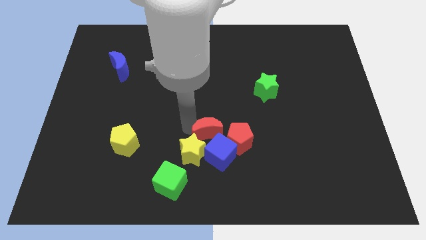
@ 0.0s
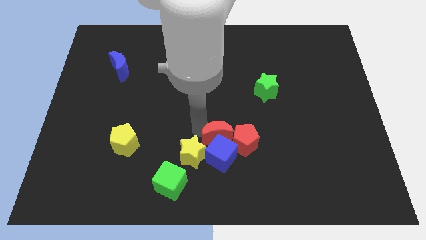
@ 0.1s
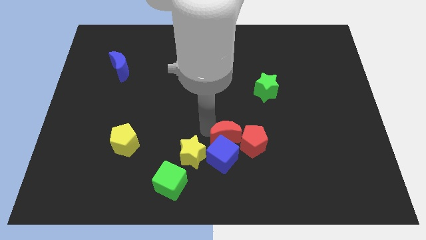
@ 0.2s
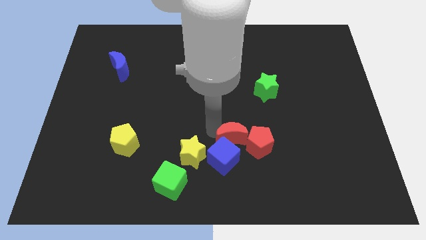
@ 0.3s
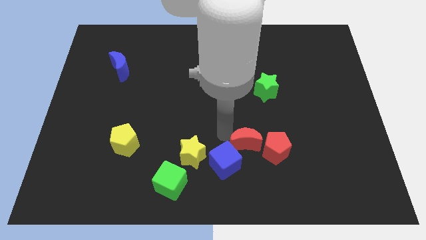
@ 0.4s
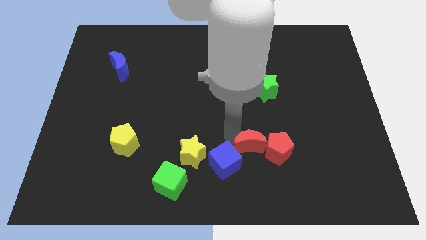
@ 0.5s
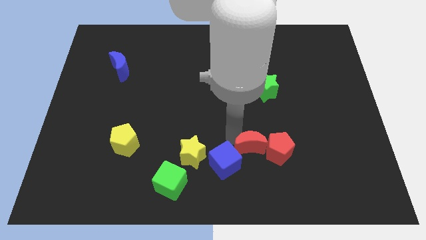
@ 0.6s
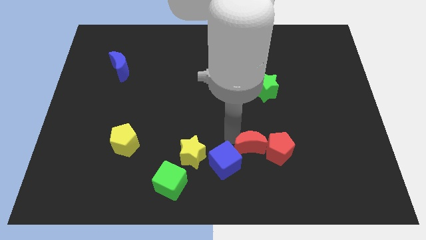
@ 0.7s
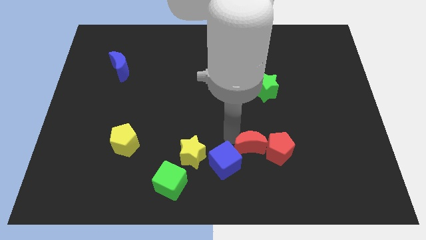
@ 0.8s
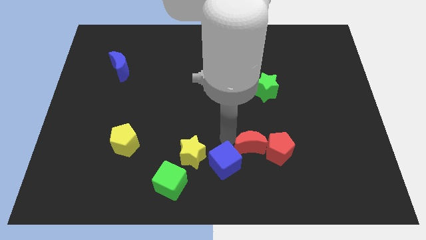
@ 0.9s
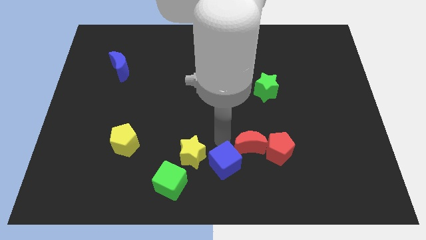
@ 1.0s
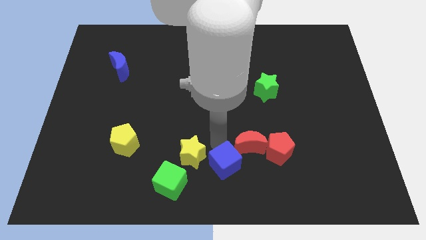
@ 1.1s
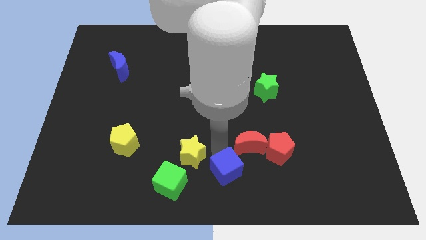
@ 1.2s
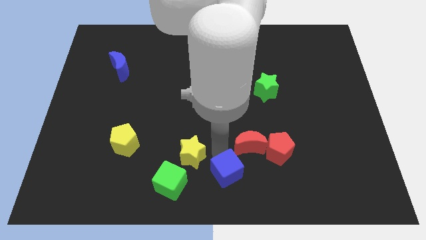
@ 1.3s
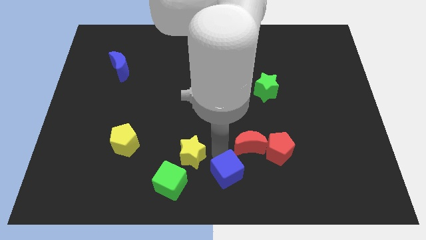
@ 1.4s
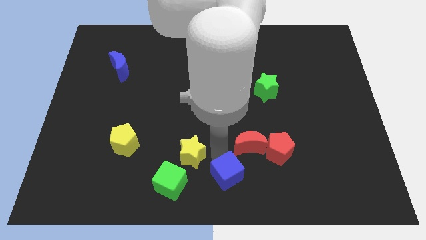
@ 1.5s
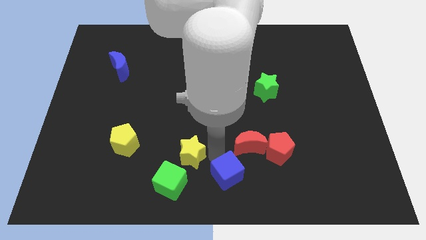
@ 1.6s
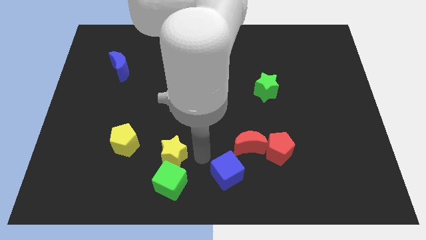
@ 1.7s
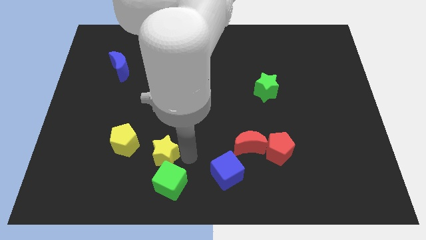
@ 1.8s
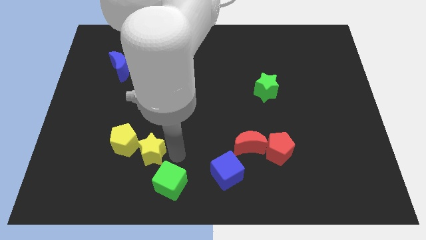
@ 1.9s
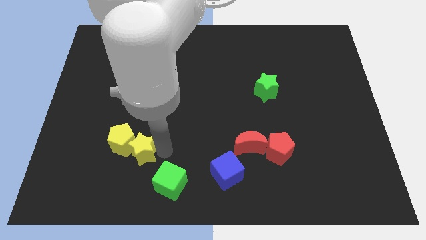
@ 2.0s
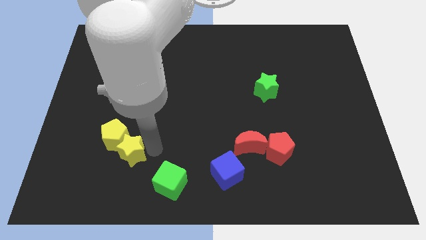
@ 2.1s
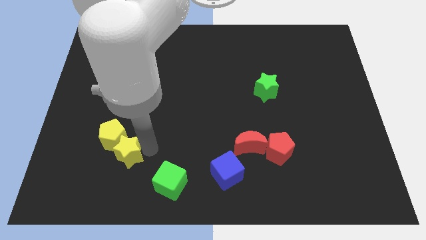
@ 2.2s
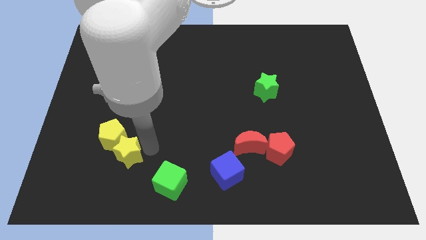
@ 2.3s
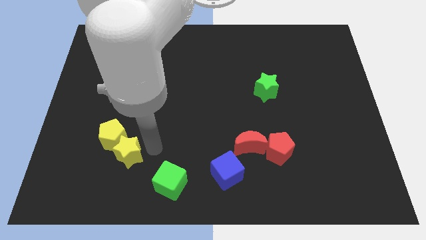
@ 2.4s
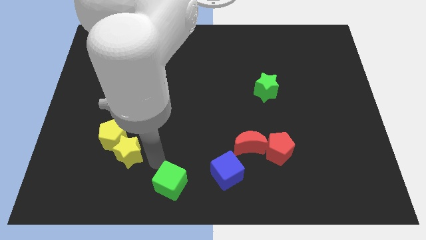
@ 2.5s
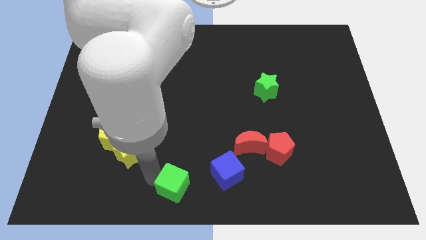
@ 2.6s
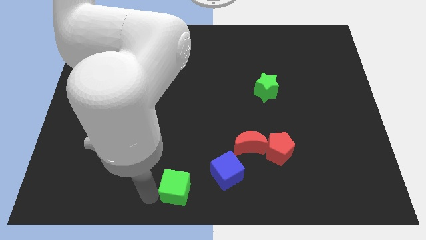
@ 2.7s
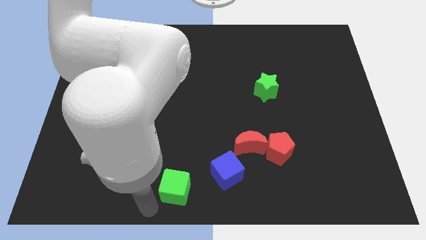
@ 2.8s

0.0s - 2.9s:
move the yellow star towards the right of yellow pentagon

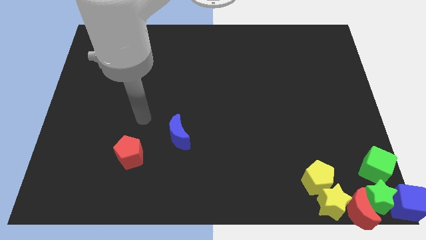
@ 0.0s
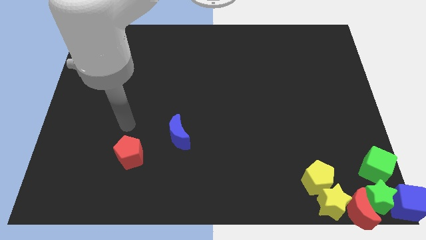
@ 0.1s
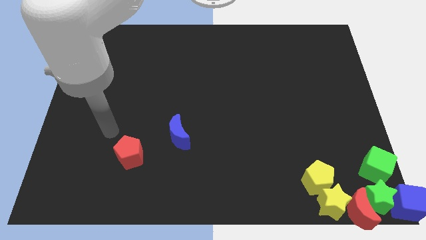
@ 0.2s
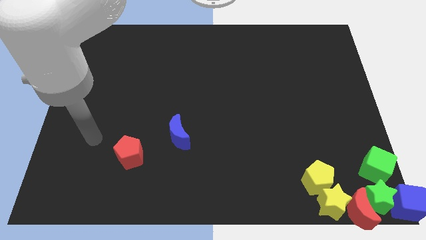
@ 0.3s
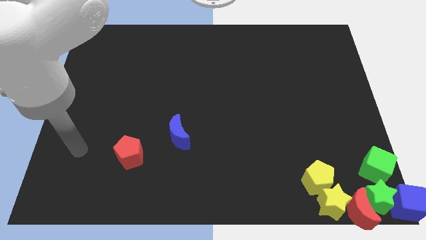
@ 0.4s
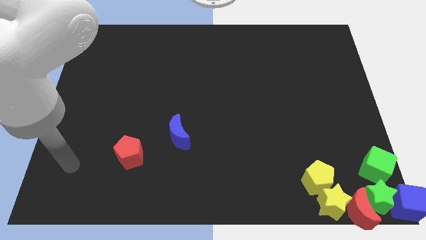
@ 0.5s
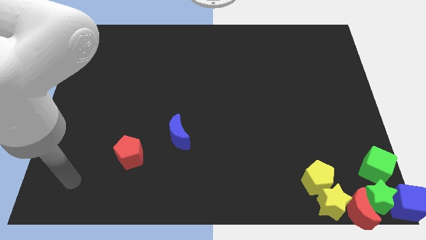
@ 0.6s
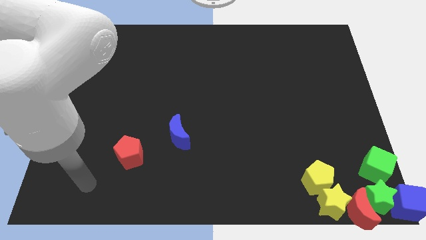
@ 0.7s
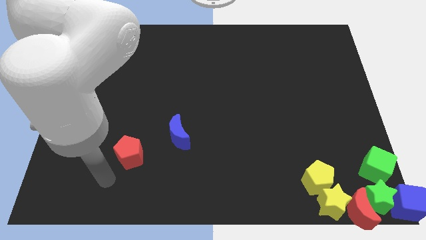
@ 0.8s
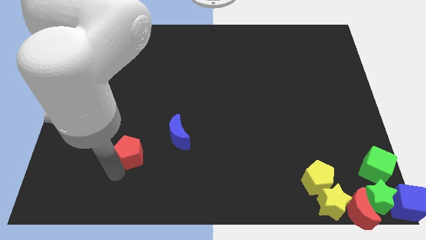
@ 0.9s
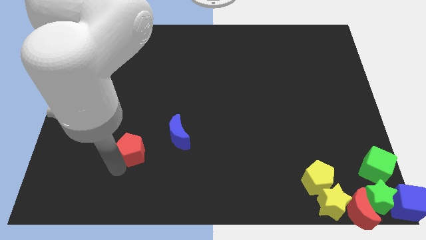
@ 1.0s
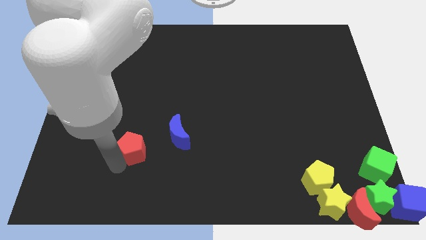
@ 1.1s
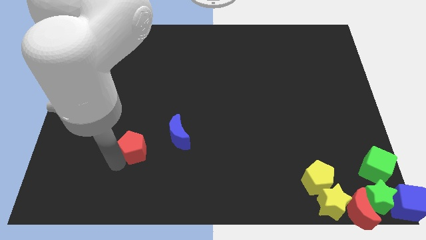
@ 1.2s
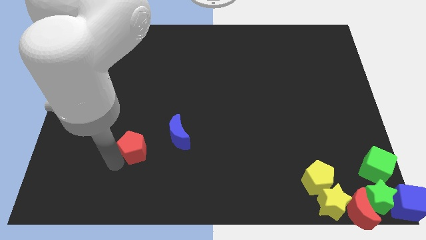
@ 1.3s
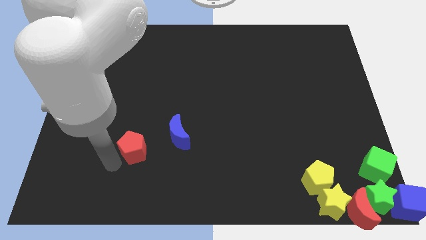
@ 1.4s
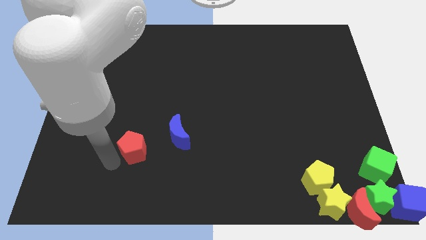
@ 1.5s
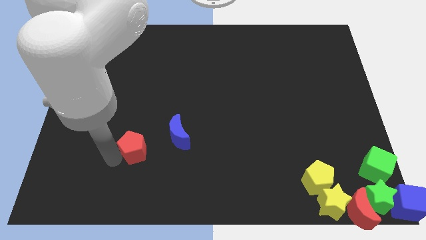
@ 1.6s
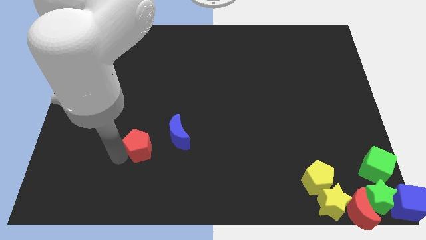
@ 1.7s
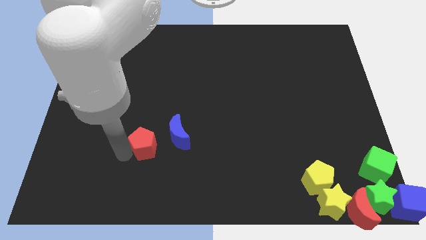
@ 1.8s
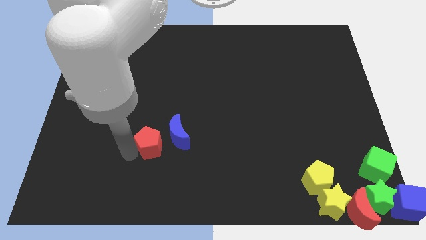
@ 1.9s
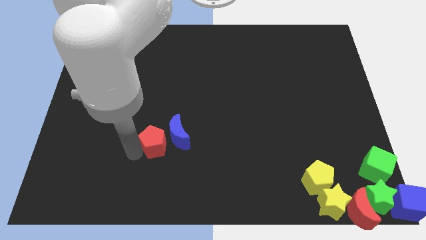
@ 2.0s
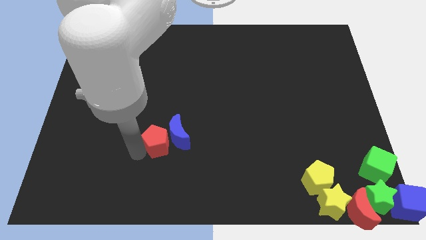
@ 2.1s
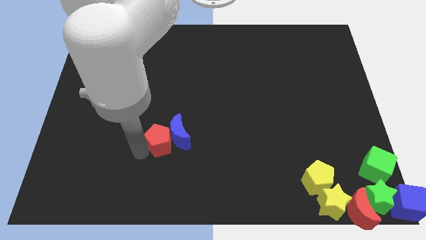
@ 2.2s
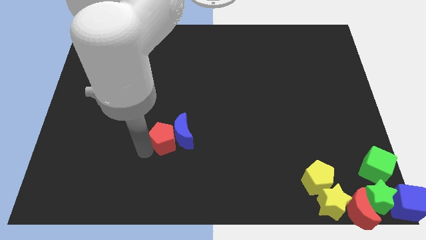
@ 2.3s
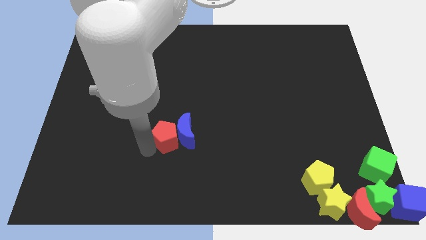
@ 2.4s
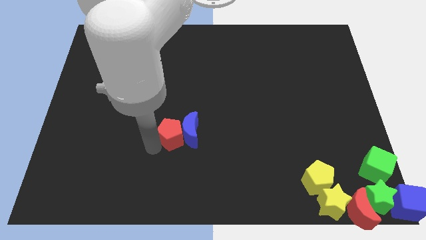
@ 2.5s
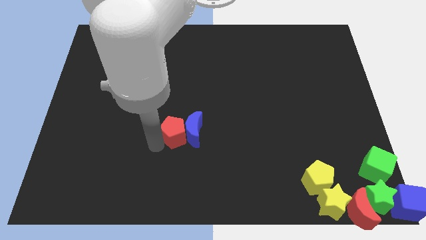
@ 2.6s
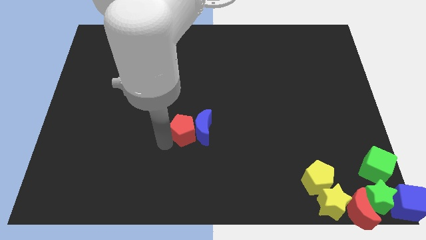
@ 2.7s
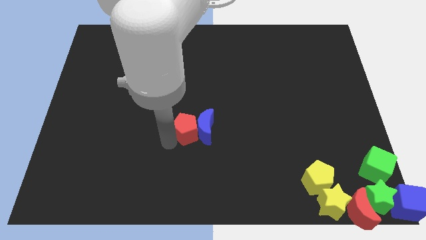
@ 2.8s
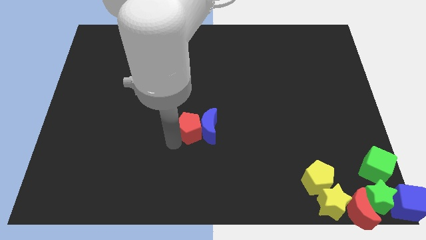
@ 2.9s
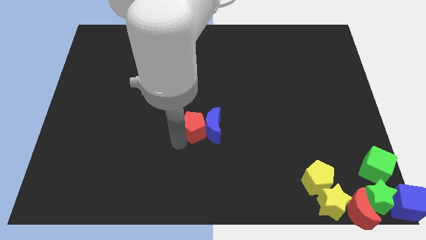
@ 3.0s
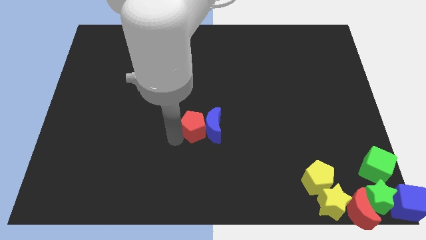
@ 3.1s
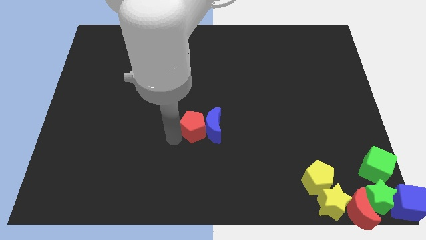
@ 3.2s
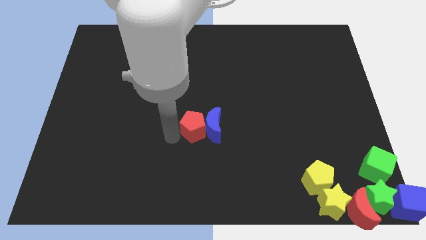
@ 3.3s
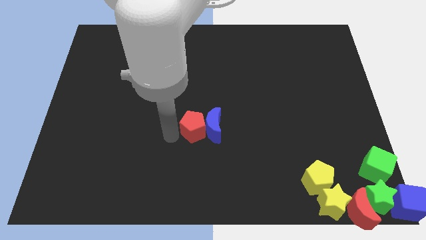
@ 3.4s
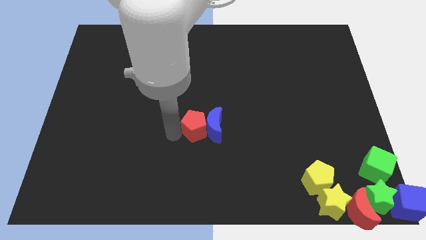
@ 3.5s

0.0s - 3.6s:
push the red pentagon and blue crescent towards the right side of the board

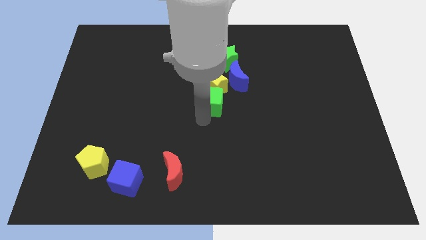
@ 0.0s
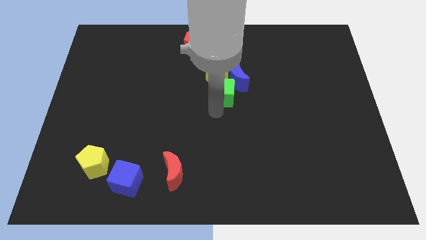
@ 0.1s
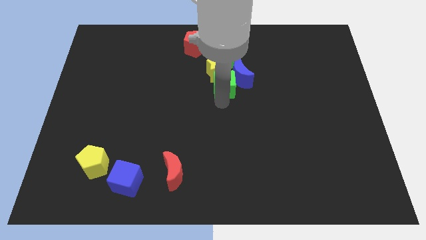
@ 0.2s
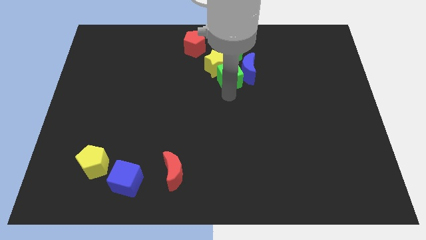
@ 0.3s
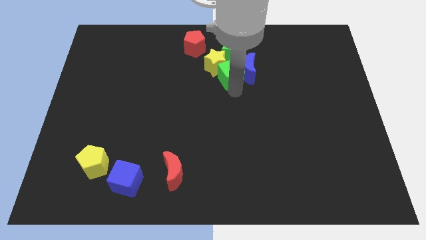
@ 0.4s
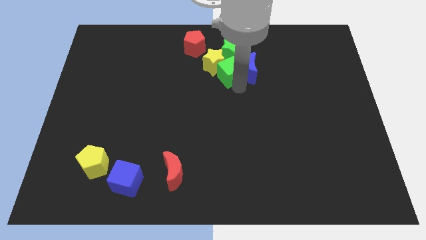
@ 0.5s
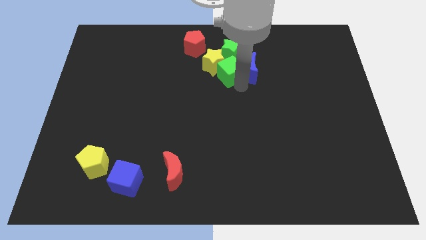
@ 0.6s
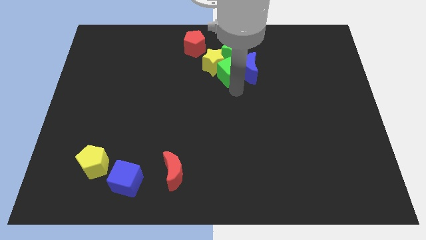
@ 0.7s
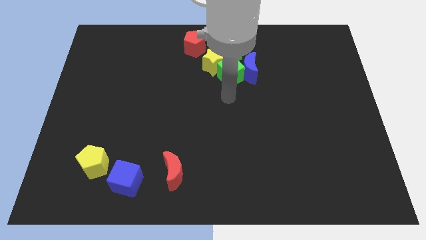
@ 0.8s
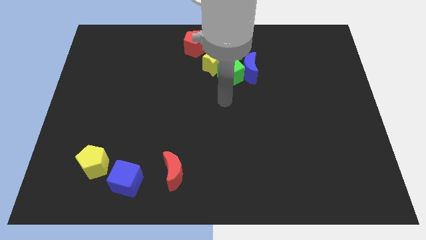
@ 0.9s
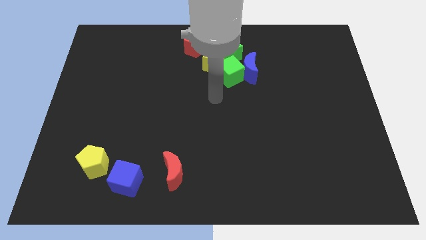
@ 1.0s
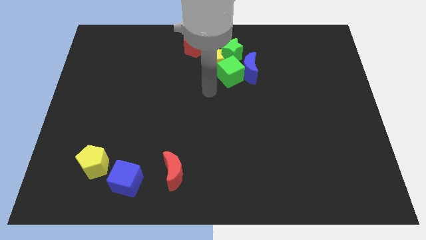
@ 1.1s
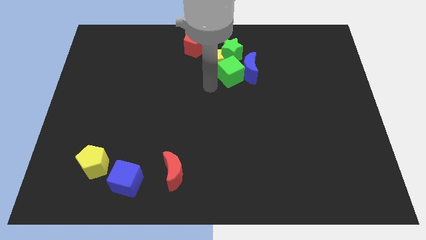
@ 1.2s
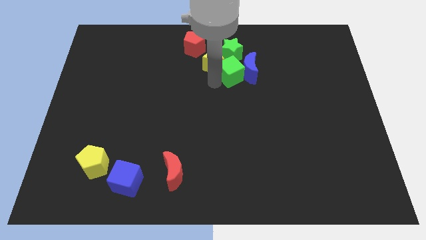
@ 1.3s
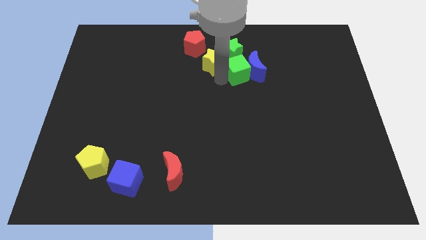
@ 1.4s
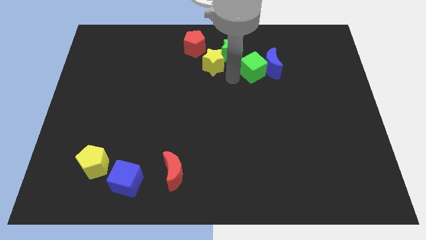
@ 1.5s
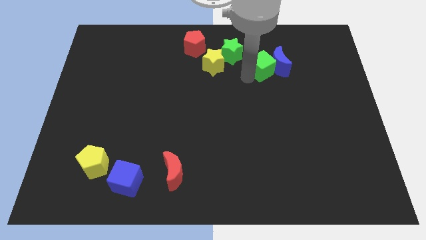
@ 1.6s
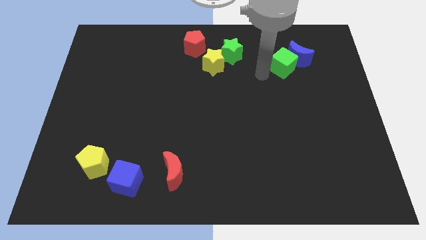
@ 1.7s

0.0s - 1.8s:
push green cube into the blue moon

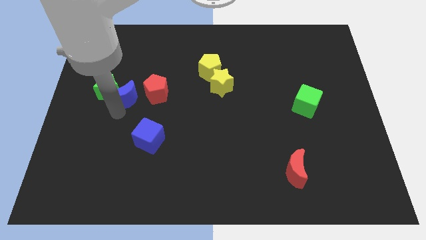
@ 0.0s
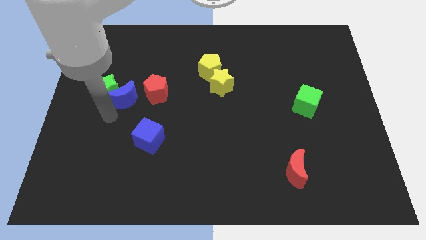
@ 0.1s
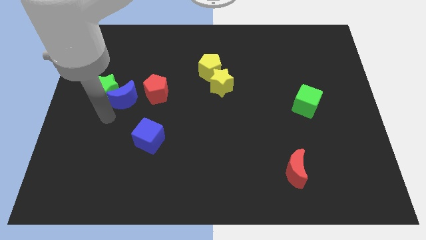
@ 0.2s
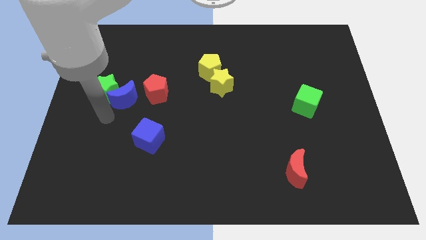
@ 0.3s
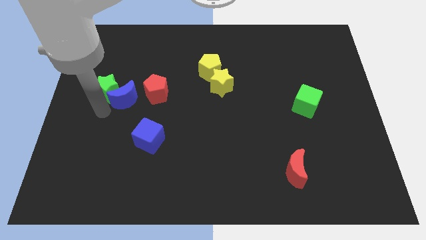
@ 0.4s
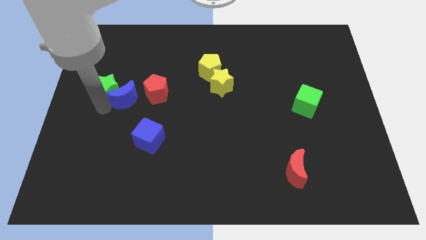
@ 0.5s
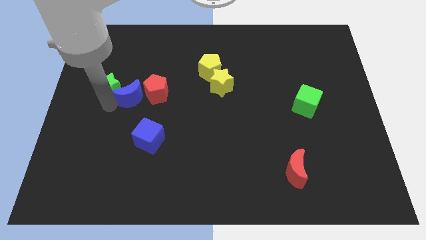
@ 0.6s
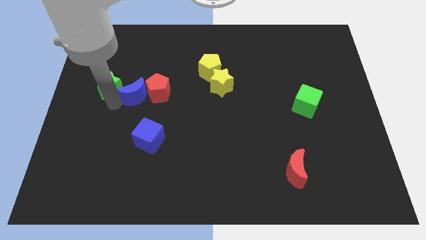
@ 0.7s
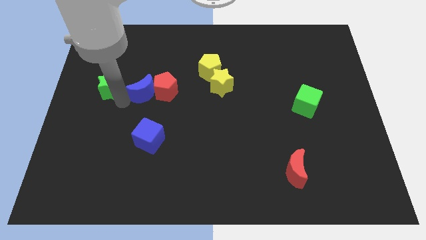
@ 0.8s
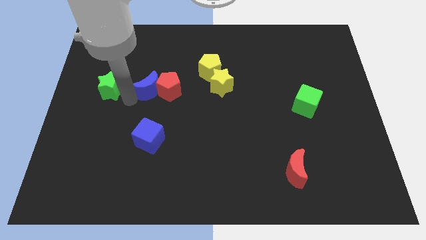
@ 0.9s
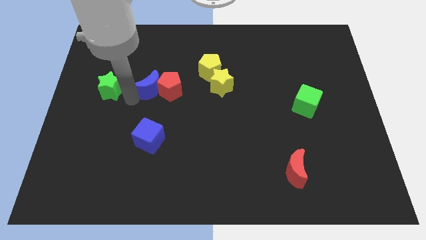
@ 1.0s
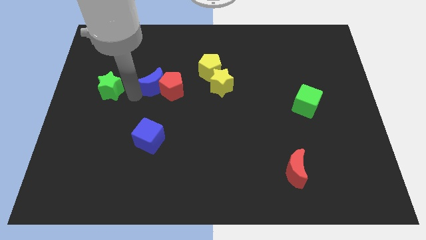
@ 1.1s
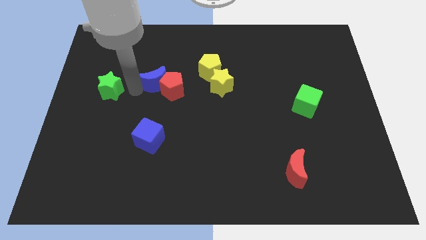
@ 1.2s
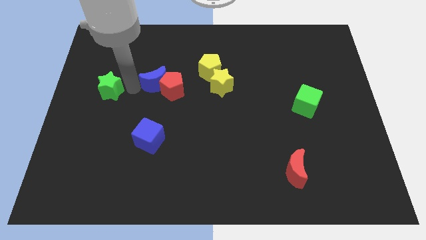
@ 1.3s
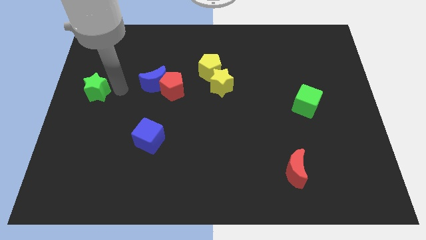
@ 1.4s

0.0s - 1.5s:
slide the blue moon into the red pentagon
